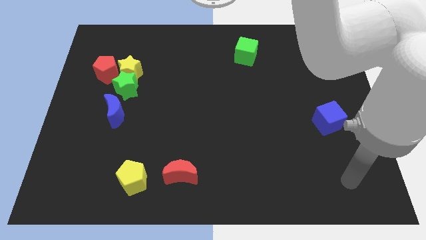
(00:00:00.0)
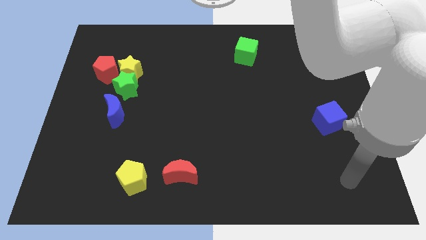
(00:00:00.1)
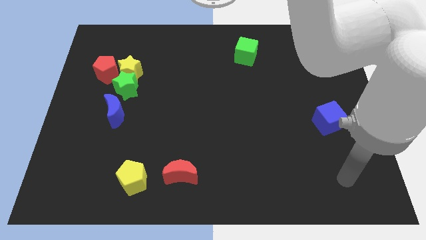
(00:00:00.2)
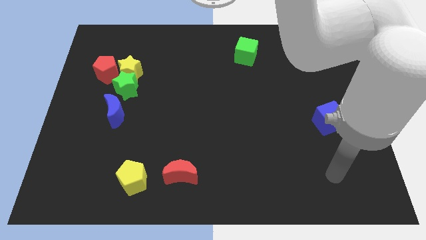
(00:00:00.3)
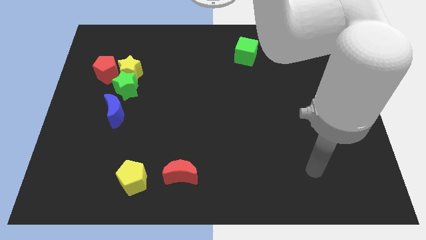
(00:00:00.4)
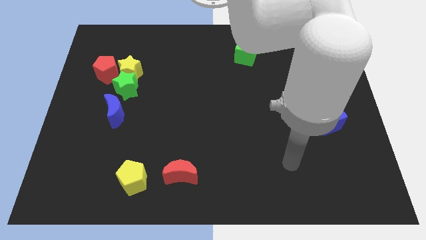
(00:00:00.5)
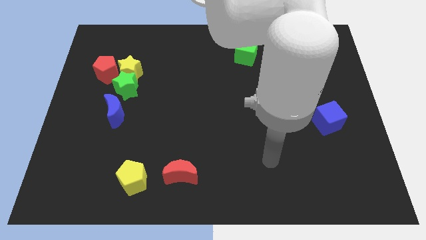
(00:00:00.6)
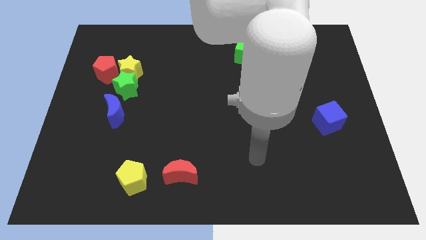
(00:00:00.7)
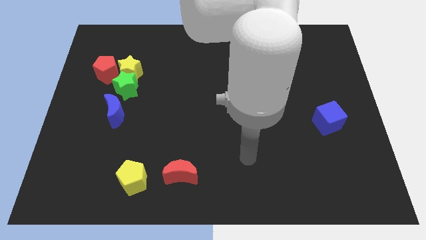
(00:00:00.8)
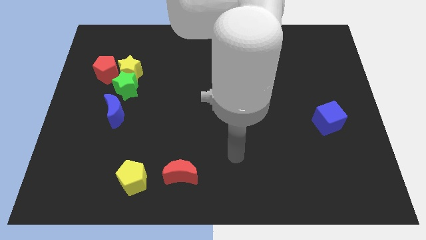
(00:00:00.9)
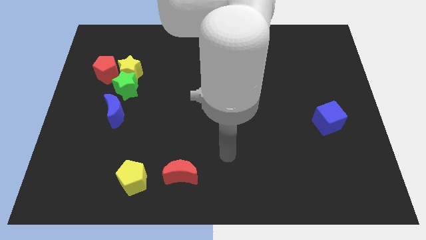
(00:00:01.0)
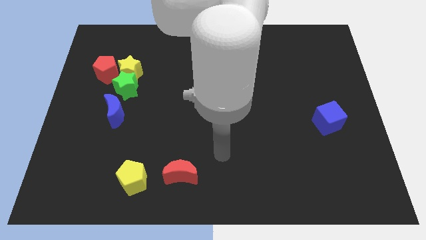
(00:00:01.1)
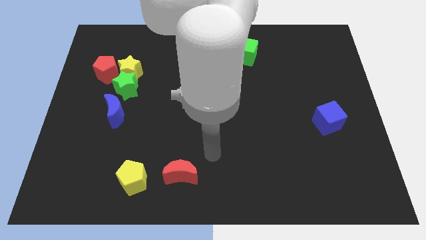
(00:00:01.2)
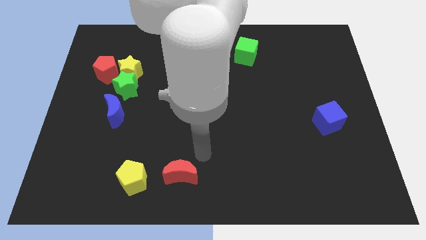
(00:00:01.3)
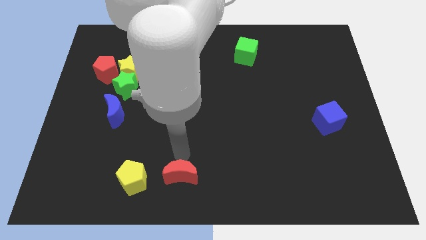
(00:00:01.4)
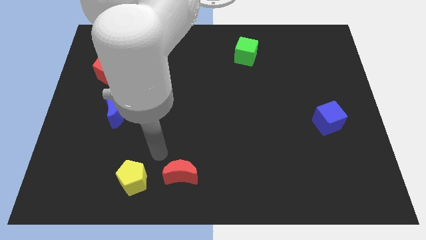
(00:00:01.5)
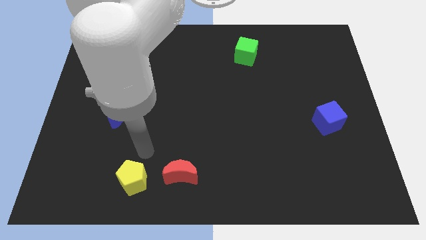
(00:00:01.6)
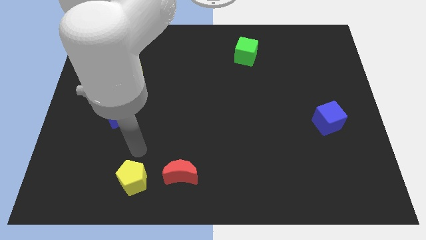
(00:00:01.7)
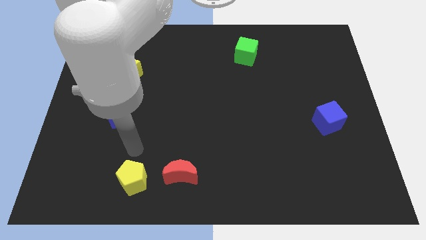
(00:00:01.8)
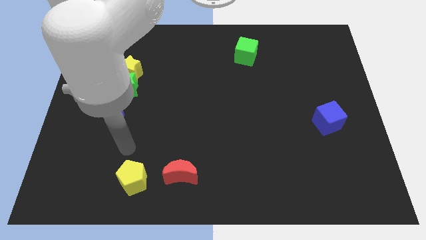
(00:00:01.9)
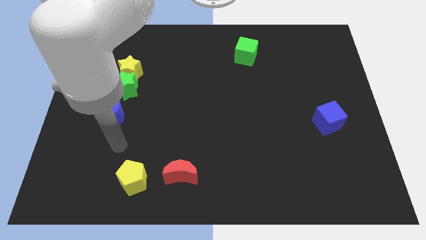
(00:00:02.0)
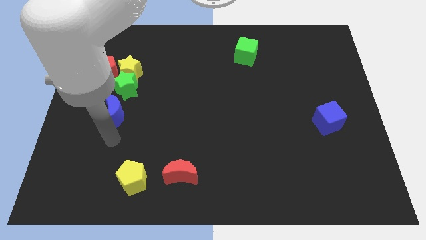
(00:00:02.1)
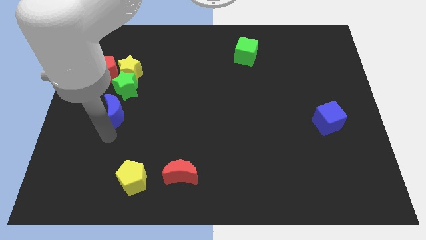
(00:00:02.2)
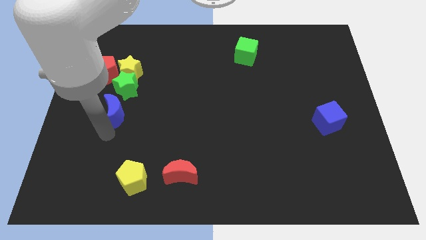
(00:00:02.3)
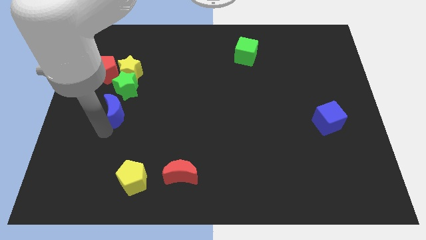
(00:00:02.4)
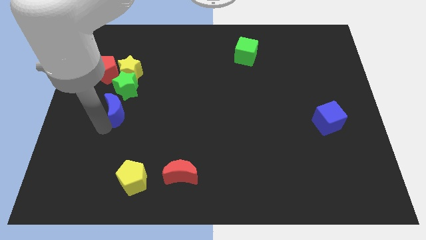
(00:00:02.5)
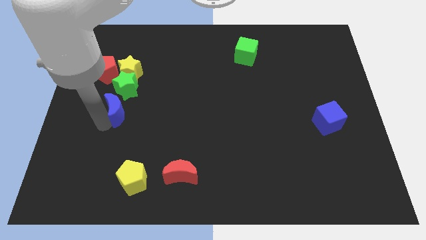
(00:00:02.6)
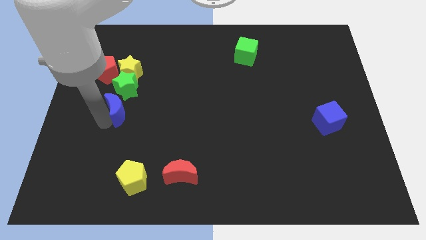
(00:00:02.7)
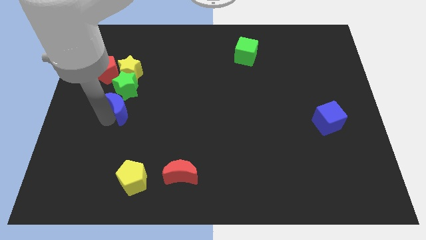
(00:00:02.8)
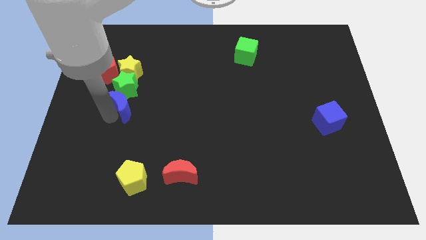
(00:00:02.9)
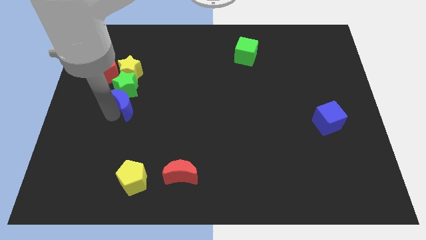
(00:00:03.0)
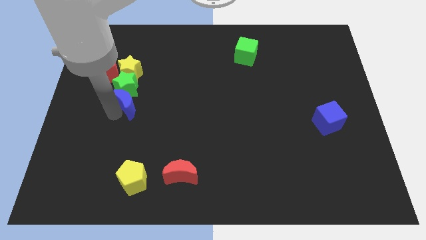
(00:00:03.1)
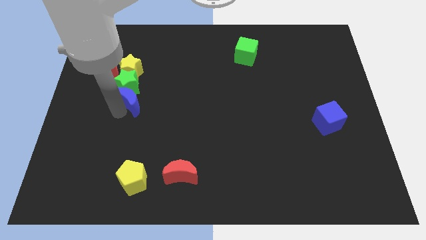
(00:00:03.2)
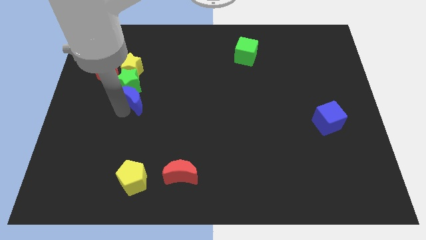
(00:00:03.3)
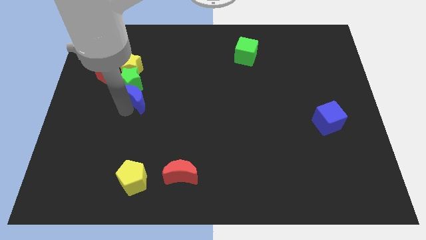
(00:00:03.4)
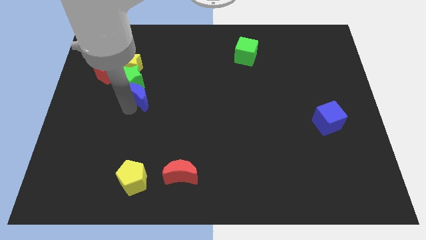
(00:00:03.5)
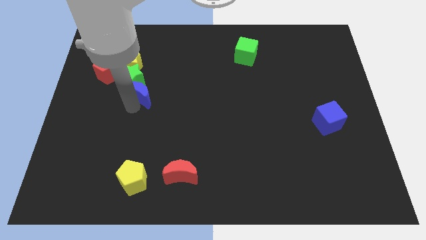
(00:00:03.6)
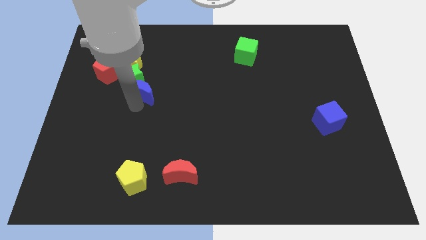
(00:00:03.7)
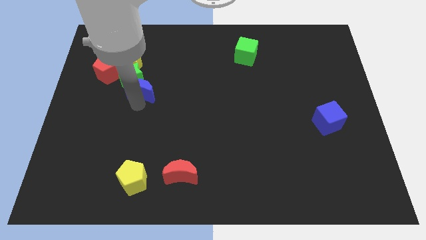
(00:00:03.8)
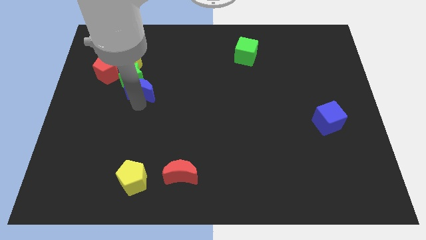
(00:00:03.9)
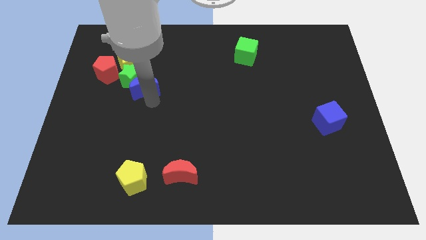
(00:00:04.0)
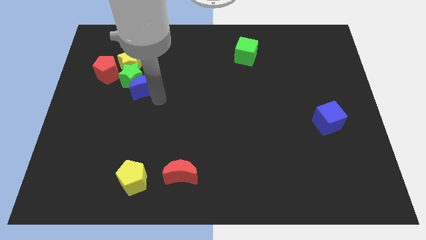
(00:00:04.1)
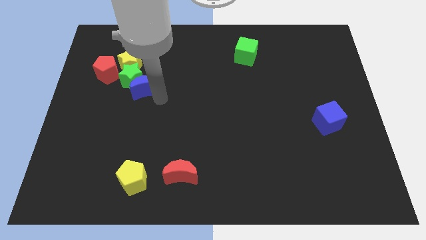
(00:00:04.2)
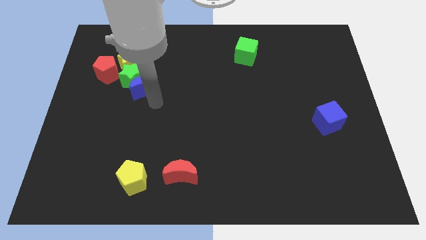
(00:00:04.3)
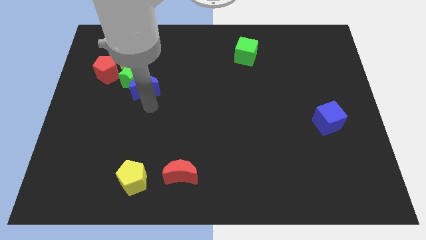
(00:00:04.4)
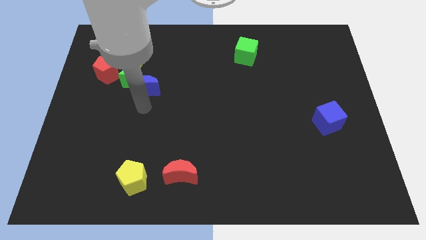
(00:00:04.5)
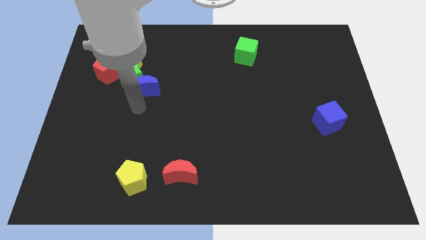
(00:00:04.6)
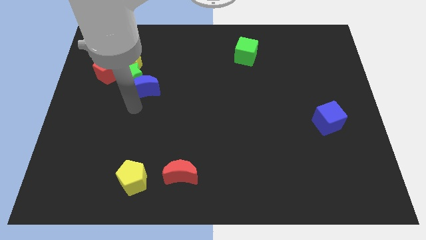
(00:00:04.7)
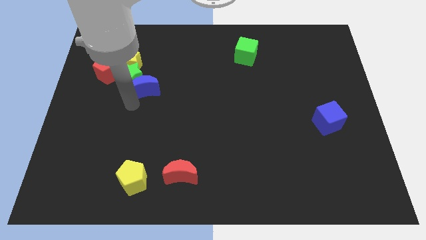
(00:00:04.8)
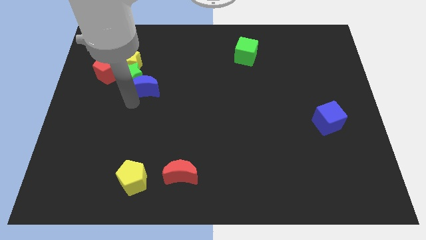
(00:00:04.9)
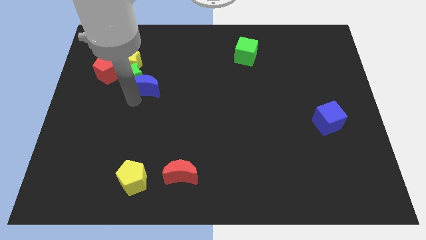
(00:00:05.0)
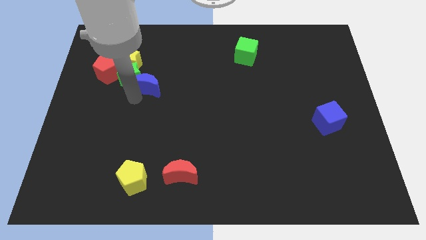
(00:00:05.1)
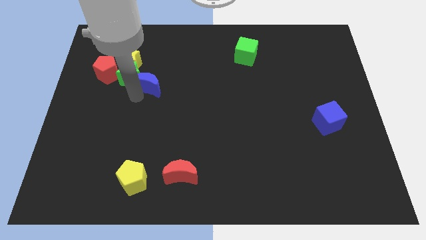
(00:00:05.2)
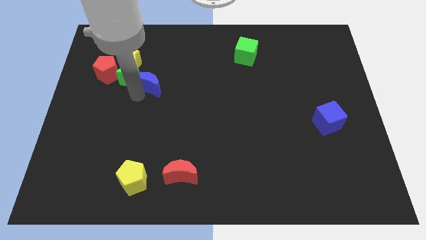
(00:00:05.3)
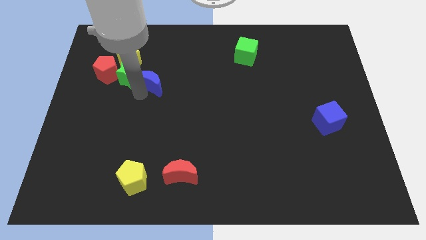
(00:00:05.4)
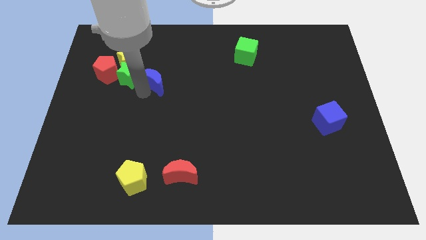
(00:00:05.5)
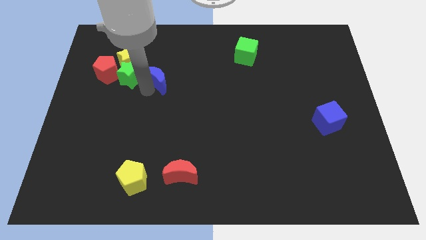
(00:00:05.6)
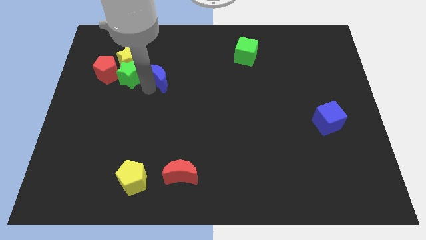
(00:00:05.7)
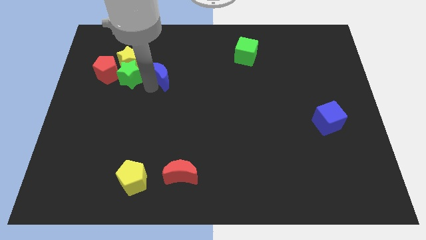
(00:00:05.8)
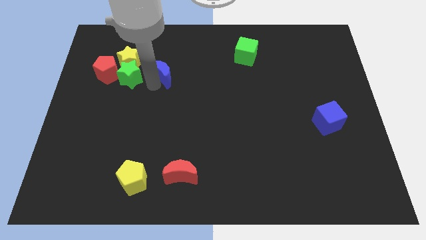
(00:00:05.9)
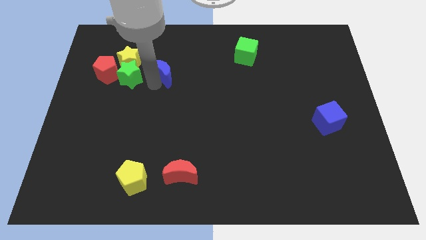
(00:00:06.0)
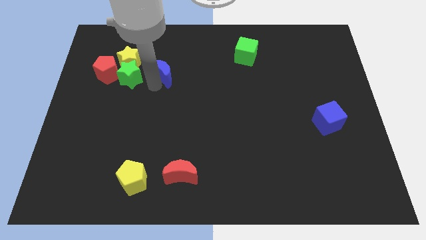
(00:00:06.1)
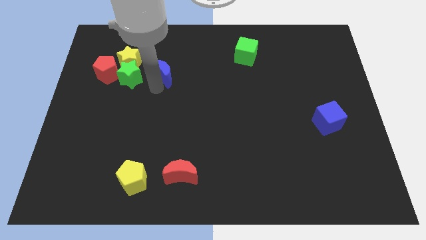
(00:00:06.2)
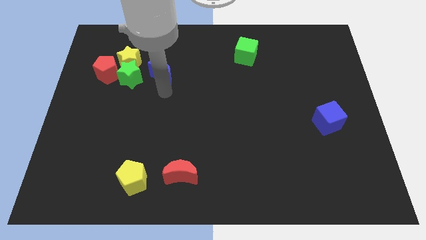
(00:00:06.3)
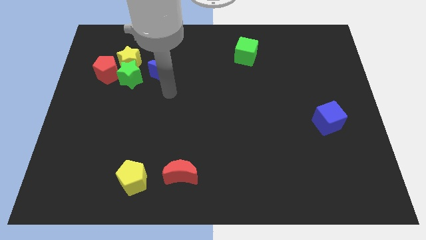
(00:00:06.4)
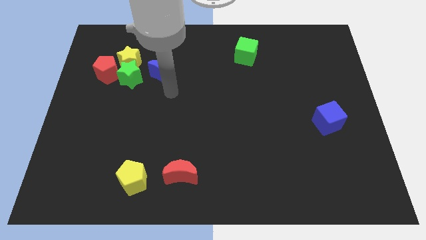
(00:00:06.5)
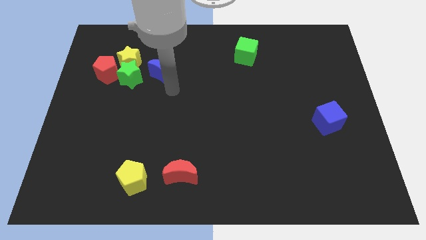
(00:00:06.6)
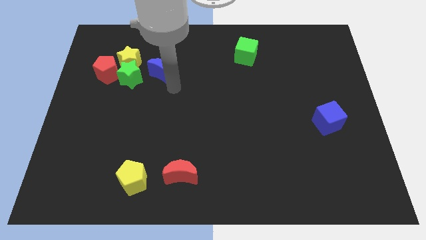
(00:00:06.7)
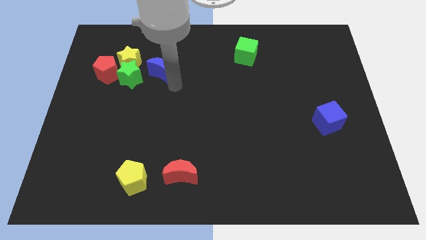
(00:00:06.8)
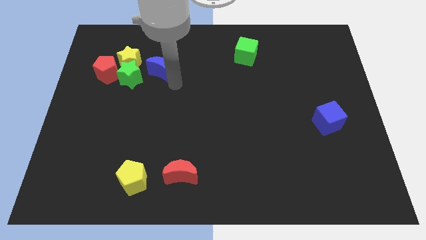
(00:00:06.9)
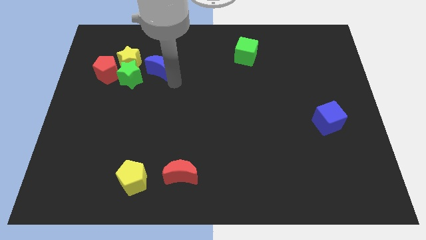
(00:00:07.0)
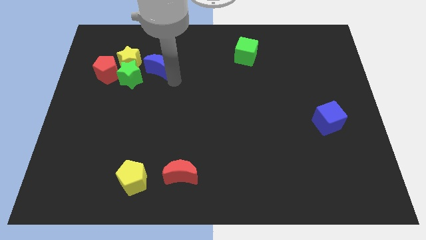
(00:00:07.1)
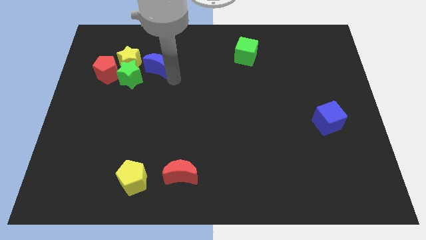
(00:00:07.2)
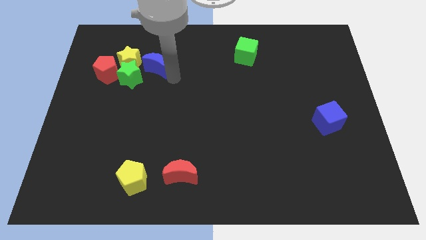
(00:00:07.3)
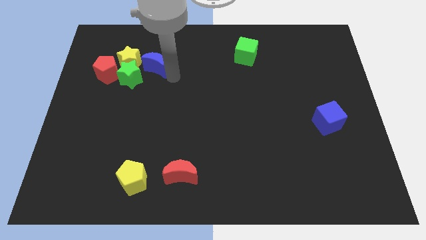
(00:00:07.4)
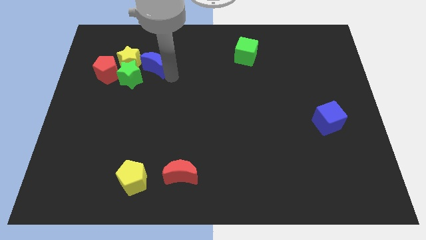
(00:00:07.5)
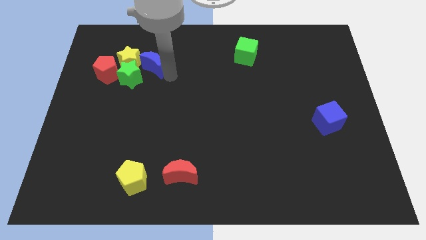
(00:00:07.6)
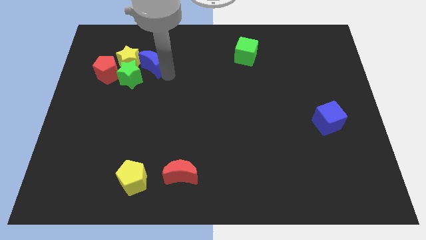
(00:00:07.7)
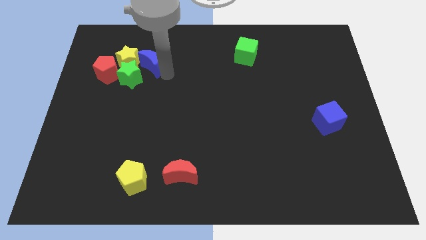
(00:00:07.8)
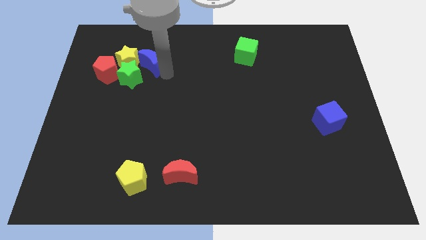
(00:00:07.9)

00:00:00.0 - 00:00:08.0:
move the blue moon to the yellow star
